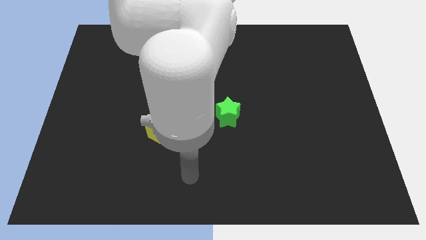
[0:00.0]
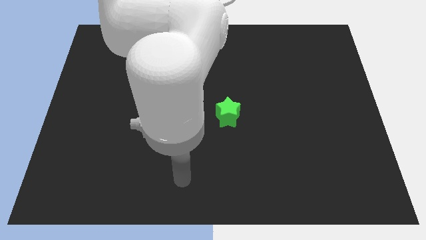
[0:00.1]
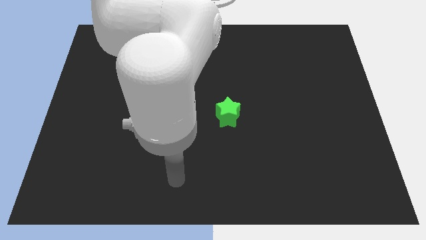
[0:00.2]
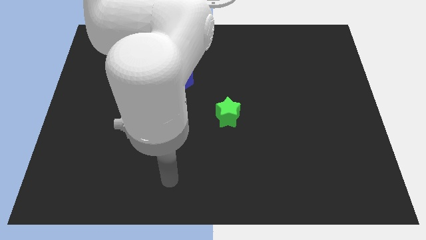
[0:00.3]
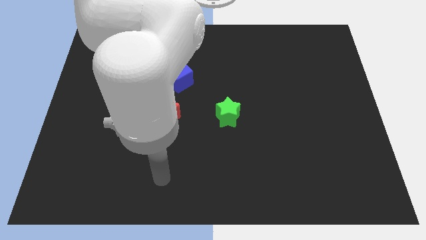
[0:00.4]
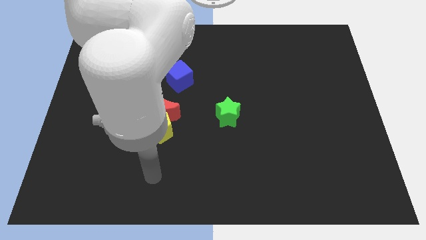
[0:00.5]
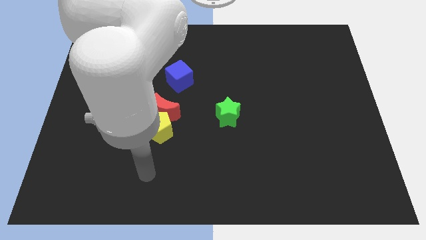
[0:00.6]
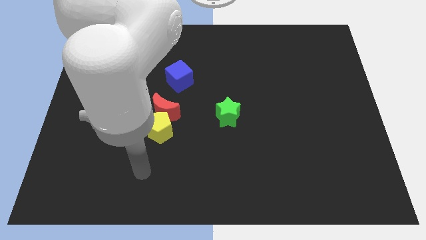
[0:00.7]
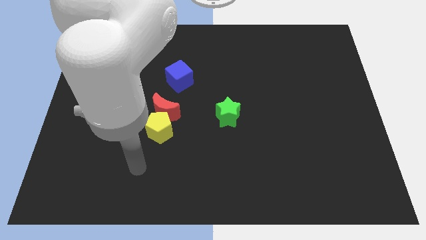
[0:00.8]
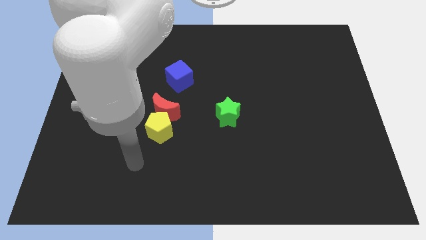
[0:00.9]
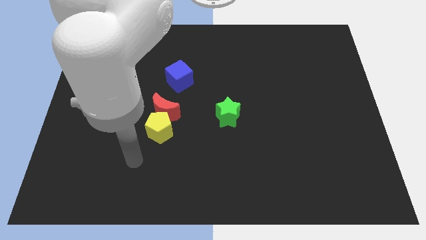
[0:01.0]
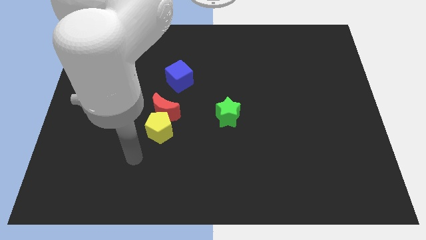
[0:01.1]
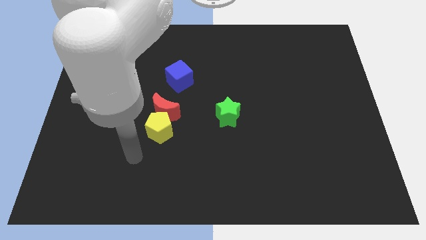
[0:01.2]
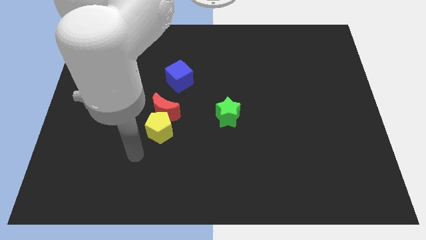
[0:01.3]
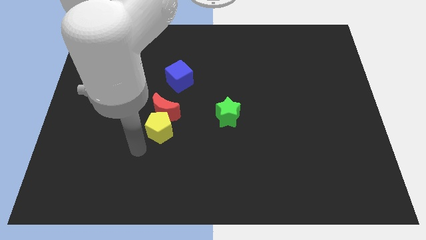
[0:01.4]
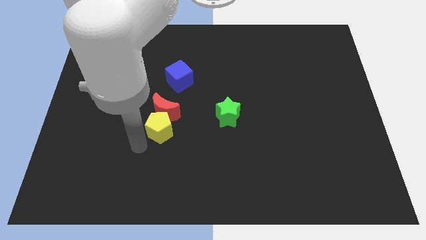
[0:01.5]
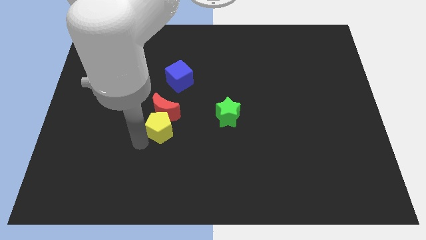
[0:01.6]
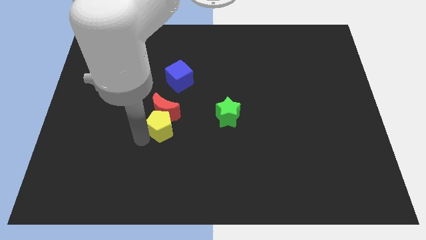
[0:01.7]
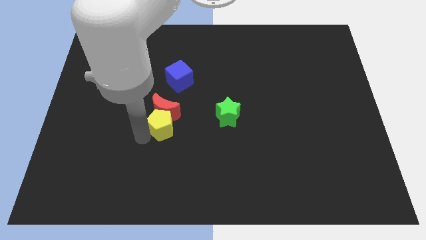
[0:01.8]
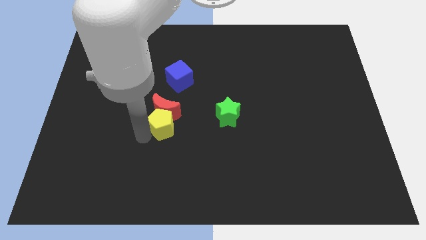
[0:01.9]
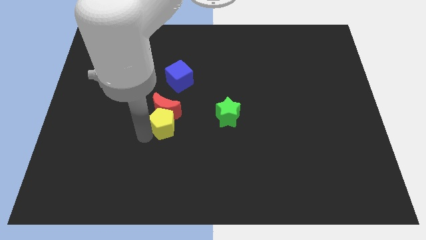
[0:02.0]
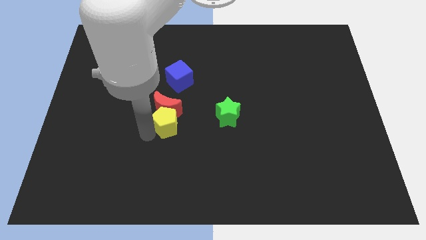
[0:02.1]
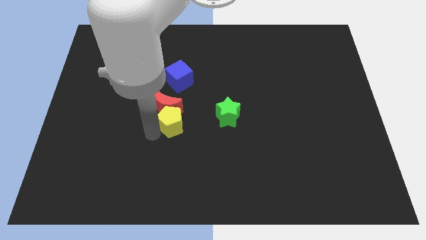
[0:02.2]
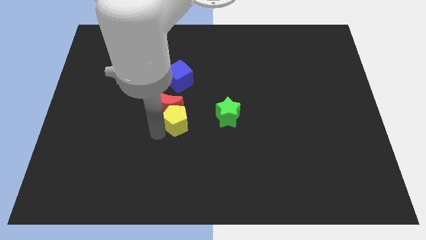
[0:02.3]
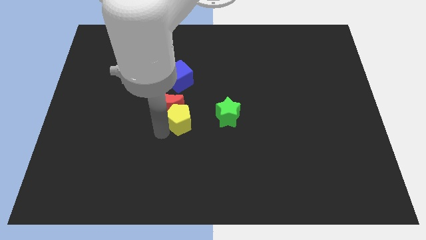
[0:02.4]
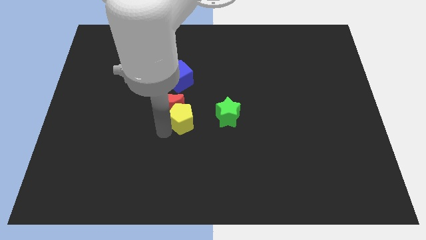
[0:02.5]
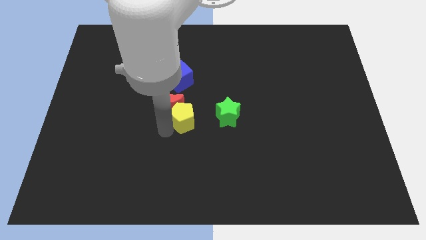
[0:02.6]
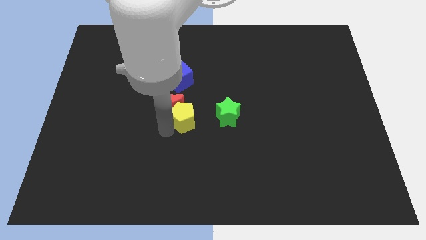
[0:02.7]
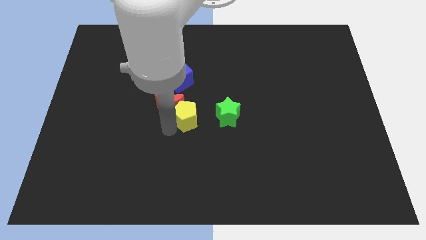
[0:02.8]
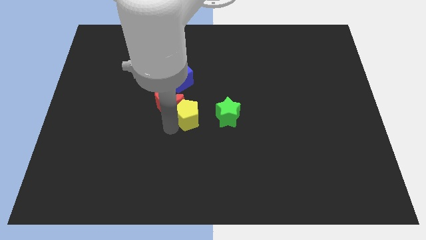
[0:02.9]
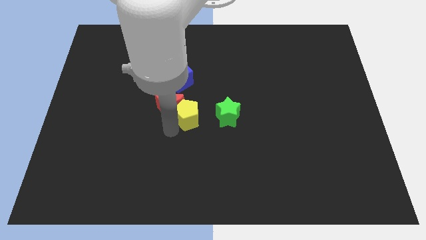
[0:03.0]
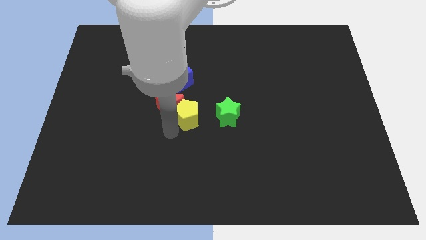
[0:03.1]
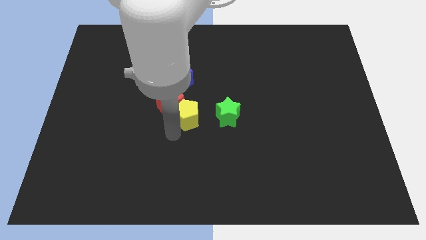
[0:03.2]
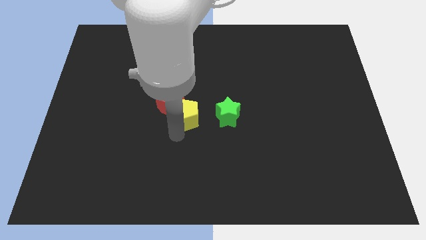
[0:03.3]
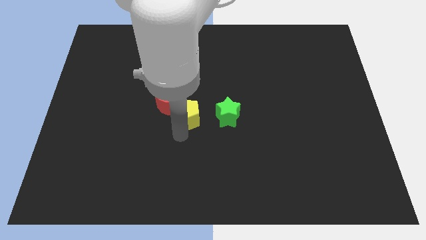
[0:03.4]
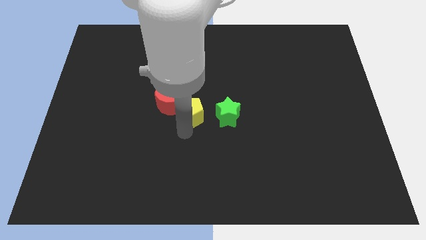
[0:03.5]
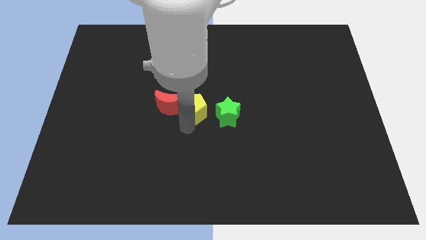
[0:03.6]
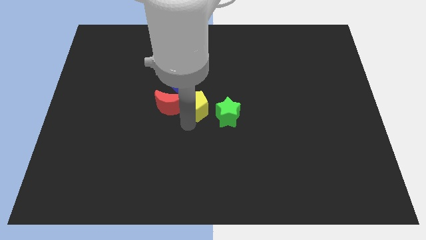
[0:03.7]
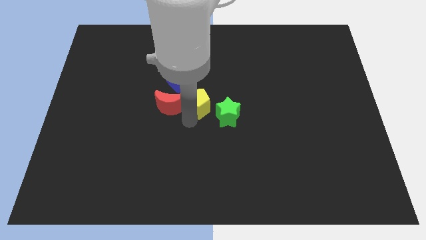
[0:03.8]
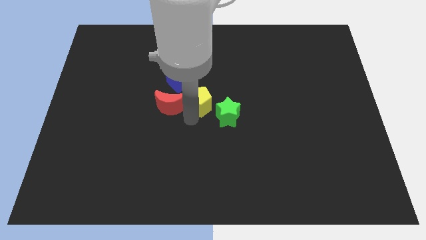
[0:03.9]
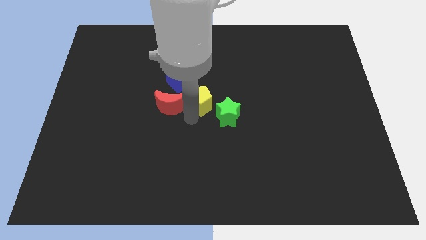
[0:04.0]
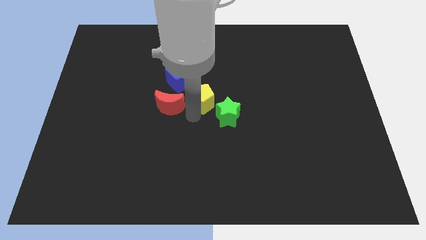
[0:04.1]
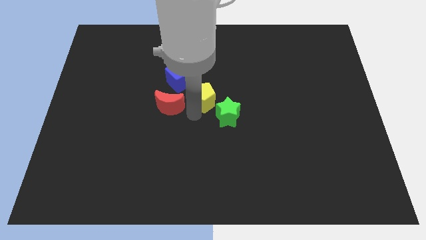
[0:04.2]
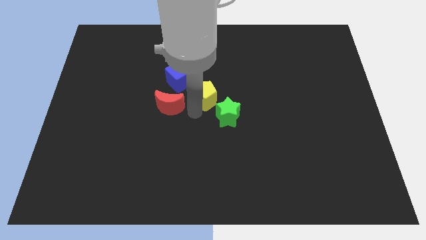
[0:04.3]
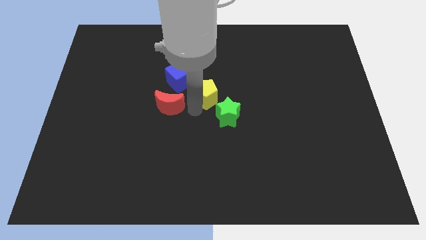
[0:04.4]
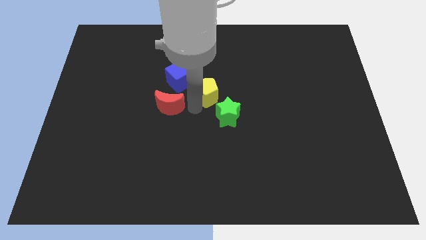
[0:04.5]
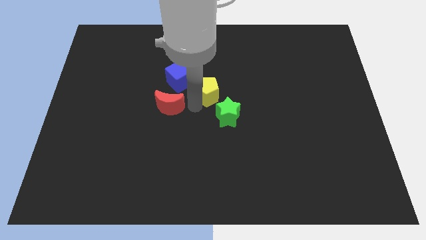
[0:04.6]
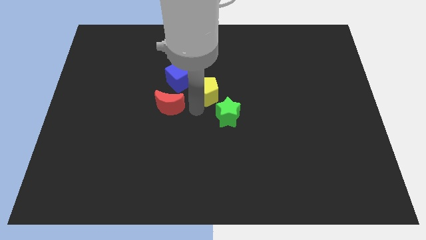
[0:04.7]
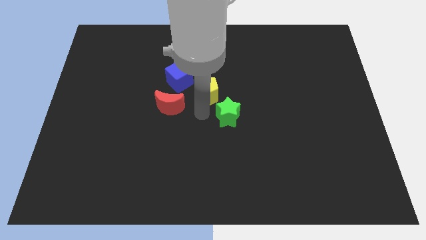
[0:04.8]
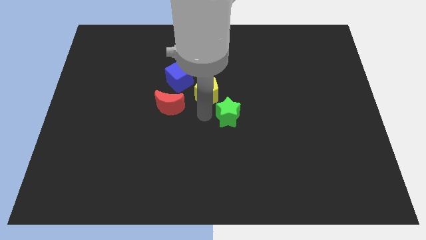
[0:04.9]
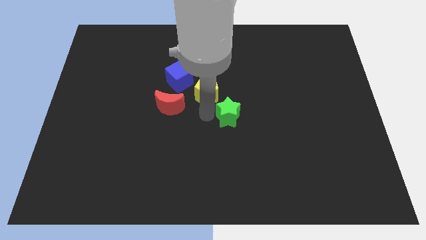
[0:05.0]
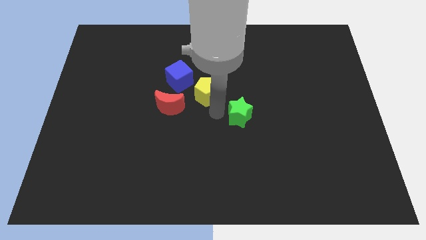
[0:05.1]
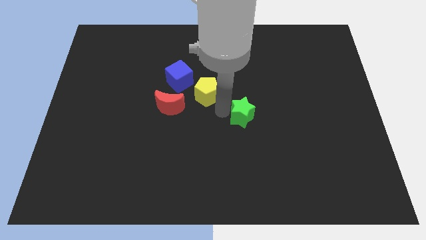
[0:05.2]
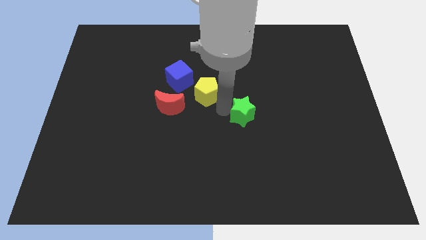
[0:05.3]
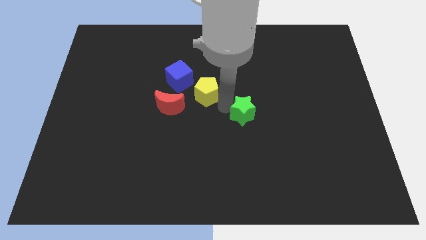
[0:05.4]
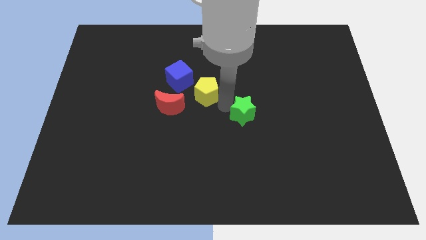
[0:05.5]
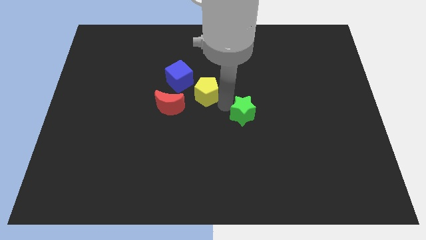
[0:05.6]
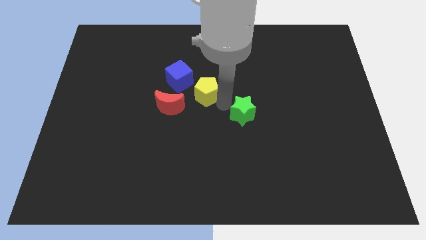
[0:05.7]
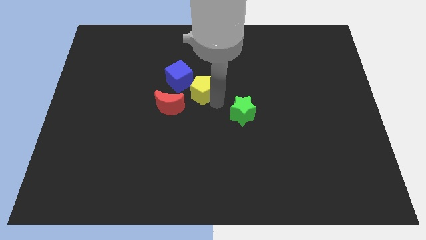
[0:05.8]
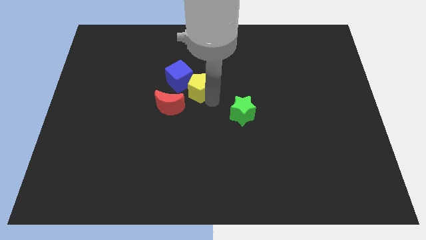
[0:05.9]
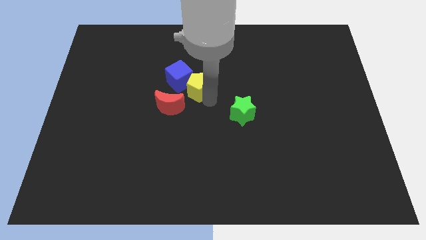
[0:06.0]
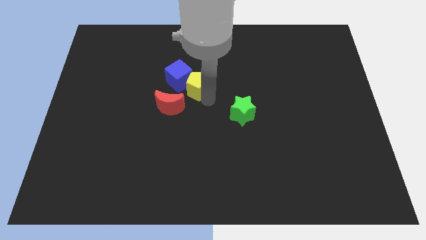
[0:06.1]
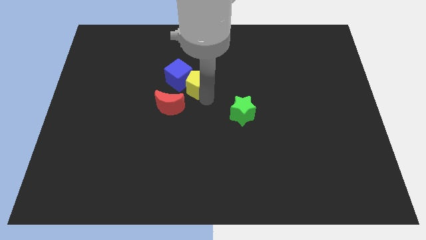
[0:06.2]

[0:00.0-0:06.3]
push the yellow block towards the cube

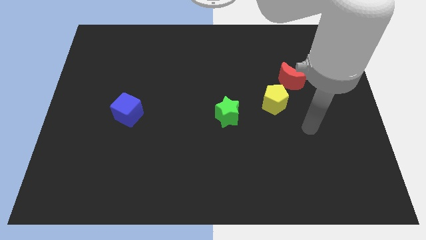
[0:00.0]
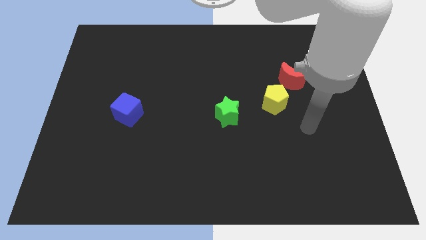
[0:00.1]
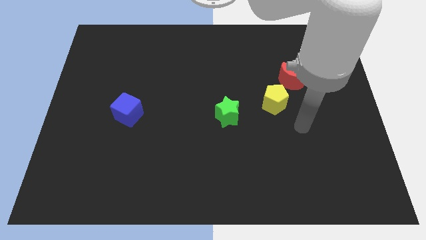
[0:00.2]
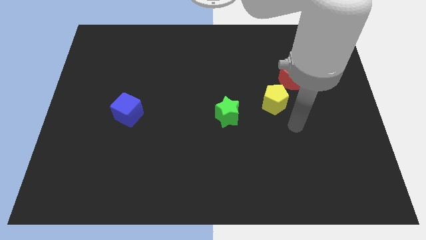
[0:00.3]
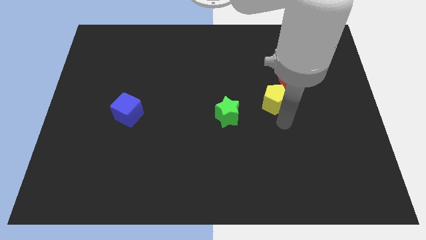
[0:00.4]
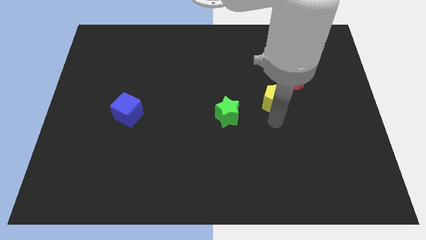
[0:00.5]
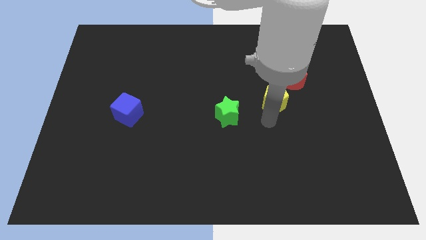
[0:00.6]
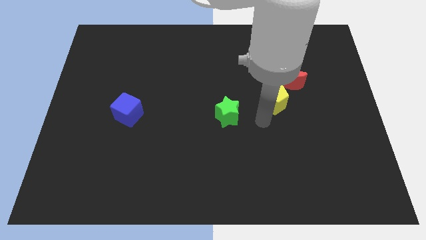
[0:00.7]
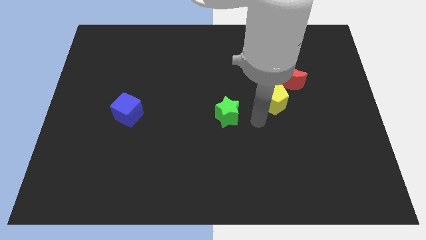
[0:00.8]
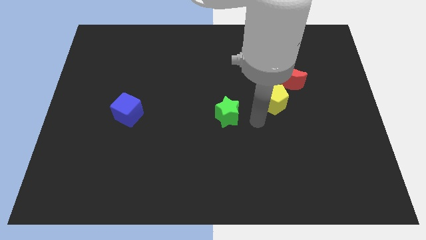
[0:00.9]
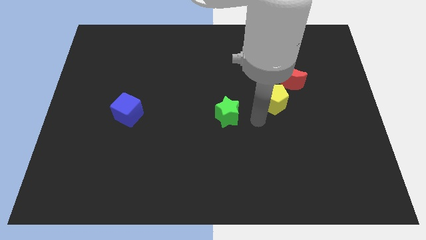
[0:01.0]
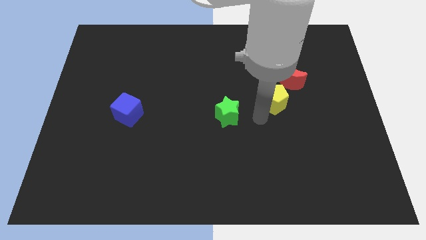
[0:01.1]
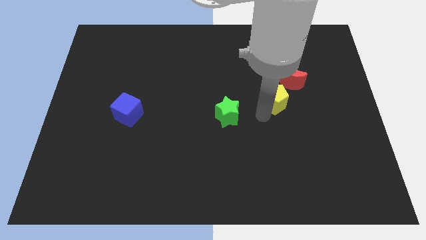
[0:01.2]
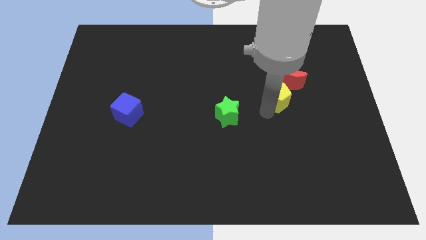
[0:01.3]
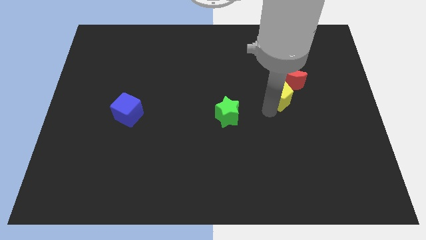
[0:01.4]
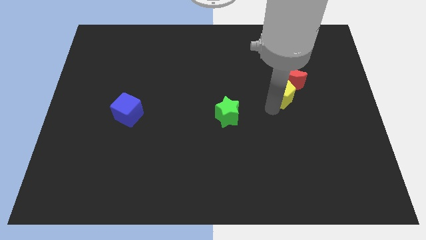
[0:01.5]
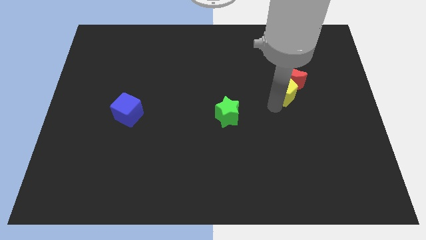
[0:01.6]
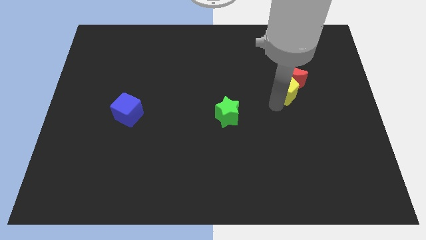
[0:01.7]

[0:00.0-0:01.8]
put the pentagon close to the red block

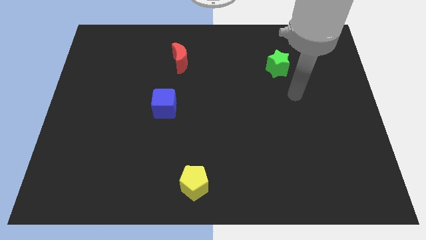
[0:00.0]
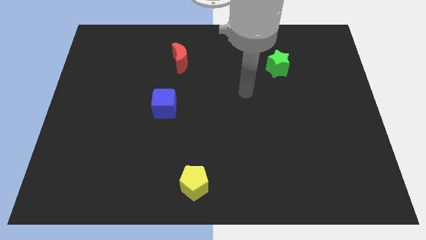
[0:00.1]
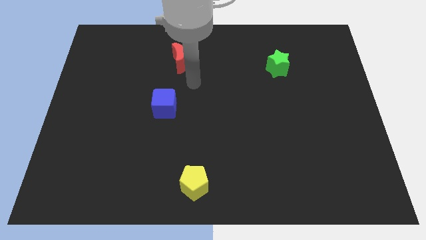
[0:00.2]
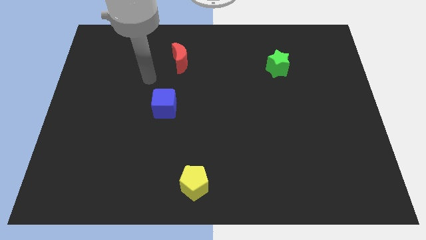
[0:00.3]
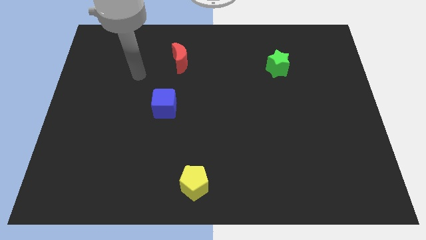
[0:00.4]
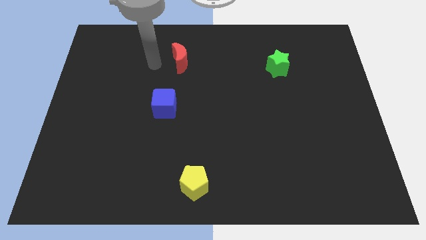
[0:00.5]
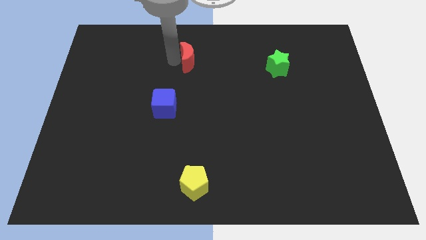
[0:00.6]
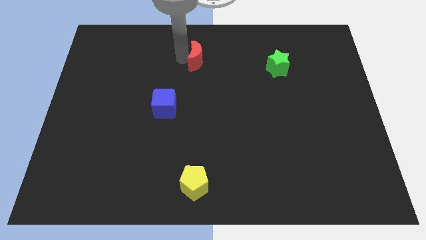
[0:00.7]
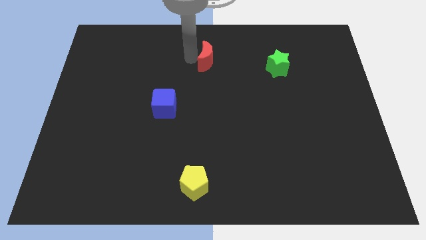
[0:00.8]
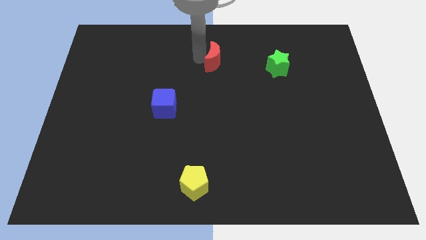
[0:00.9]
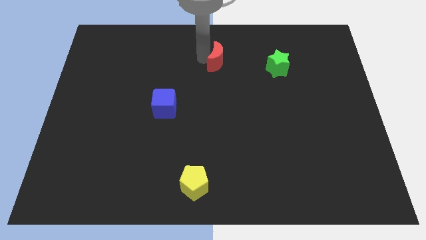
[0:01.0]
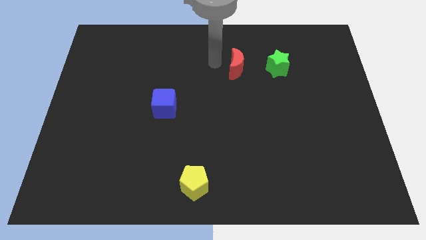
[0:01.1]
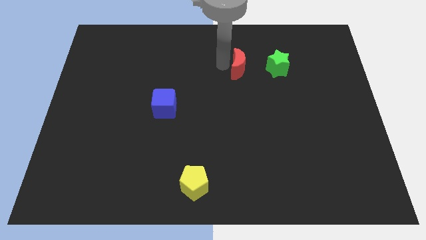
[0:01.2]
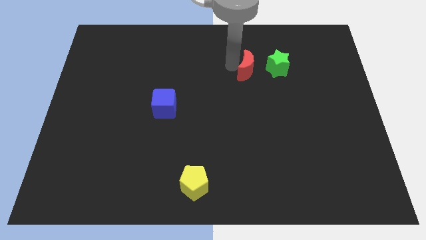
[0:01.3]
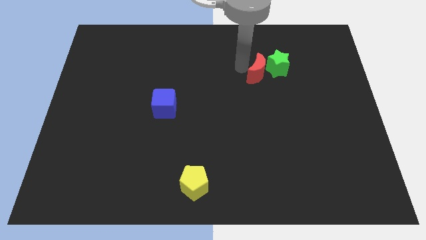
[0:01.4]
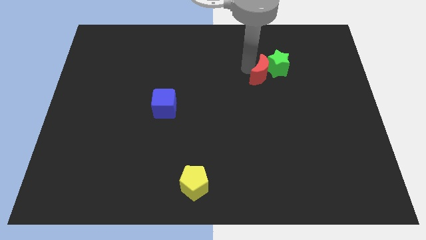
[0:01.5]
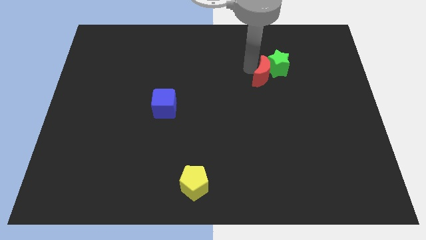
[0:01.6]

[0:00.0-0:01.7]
push the moon next to the green star
